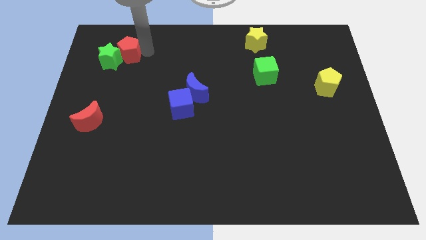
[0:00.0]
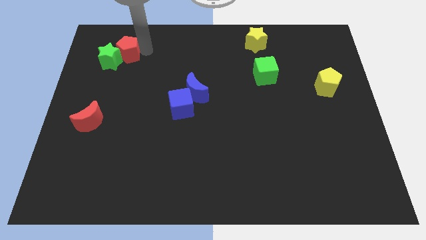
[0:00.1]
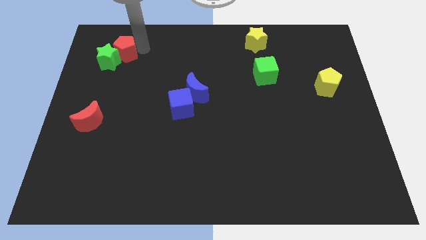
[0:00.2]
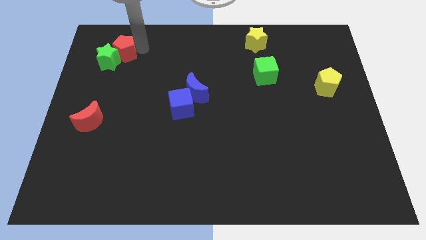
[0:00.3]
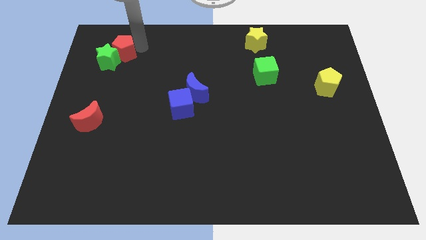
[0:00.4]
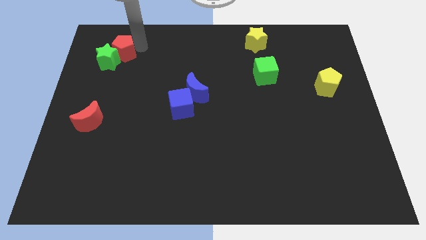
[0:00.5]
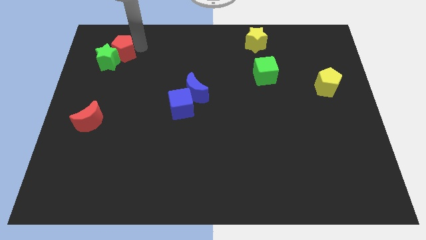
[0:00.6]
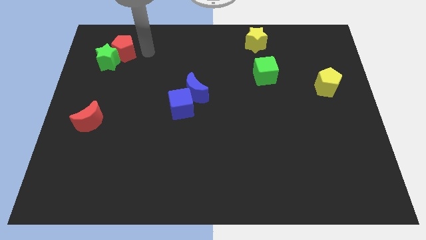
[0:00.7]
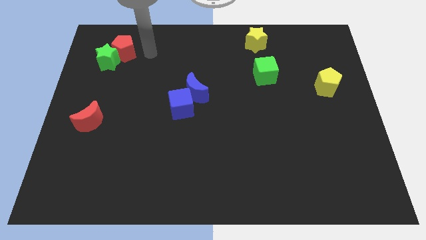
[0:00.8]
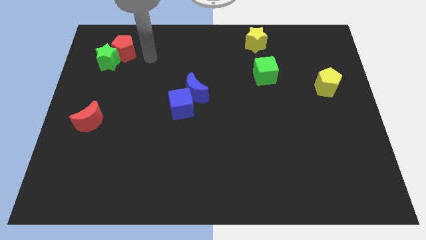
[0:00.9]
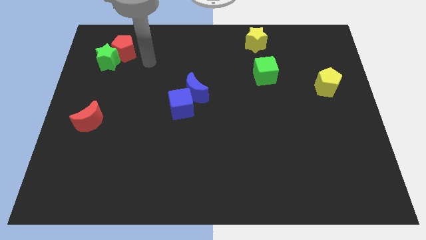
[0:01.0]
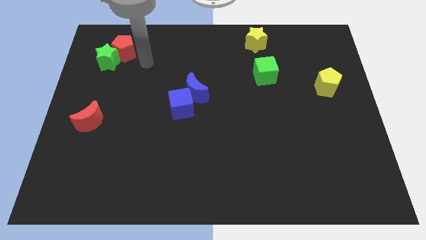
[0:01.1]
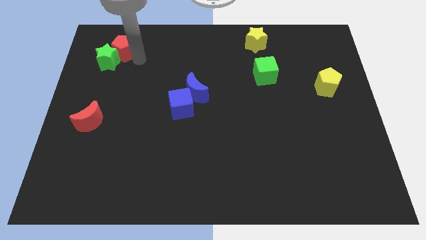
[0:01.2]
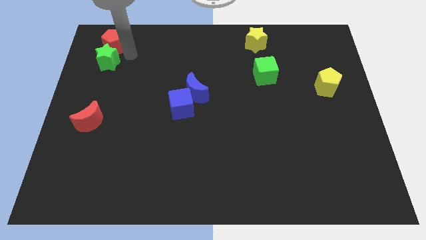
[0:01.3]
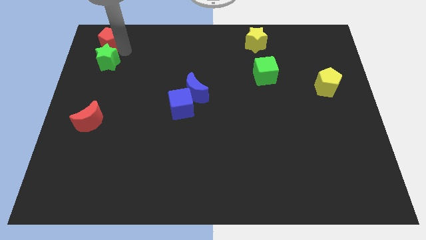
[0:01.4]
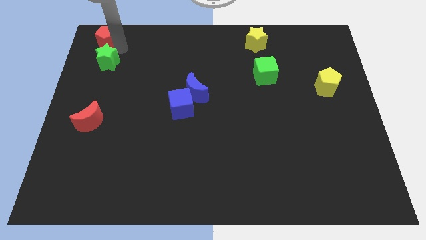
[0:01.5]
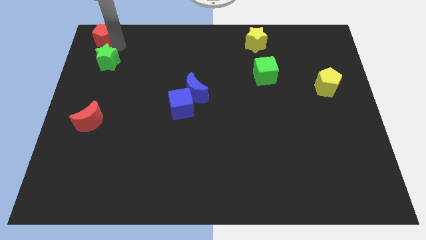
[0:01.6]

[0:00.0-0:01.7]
move red pentagon above the green star

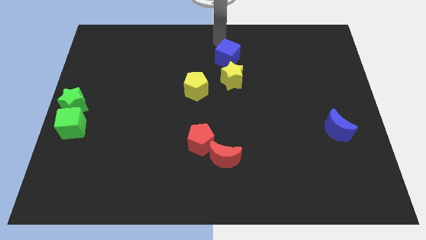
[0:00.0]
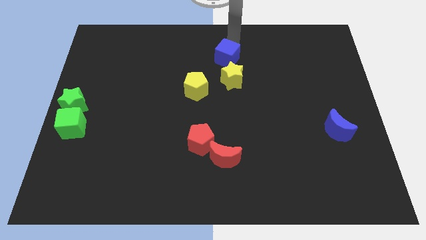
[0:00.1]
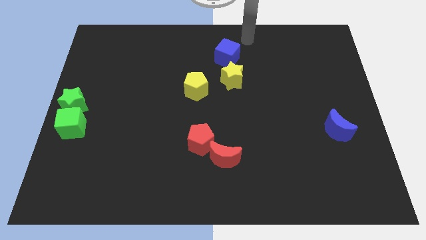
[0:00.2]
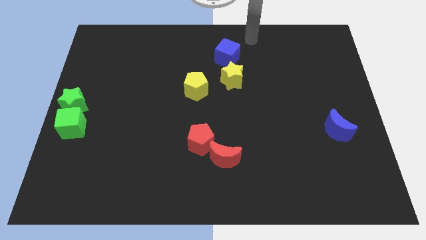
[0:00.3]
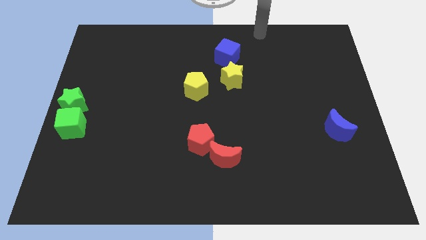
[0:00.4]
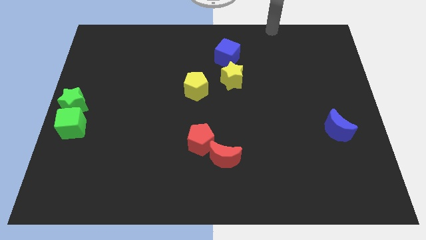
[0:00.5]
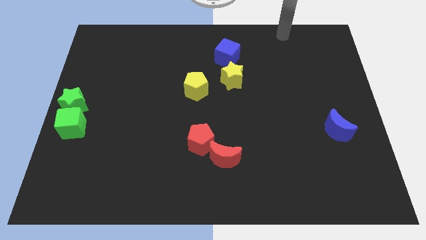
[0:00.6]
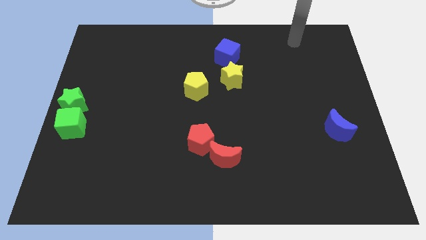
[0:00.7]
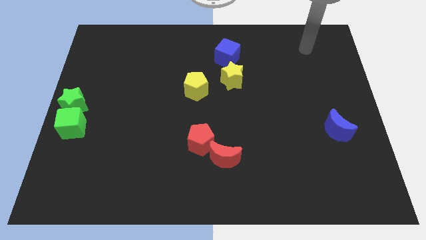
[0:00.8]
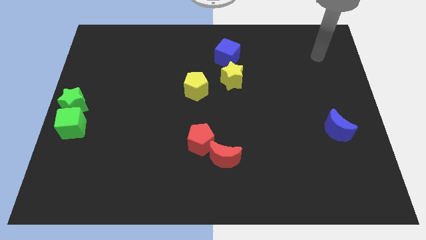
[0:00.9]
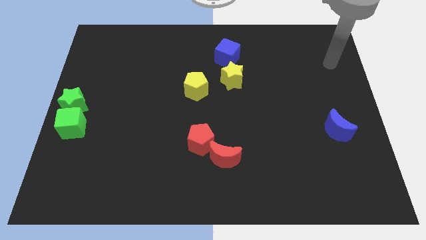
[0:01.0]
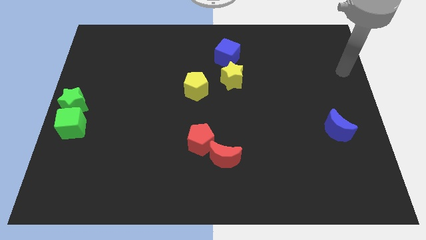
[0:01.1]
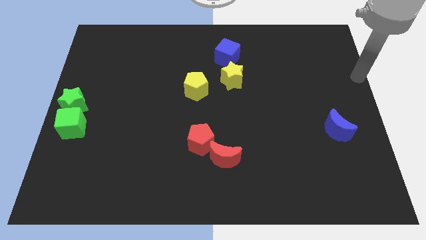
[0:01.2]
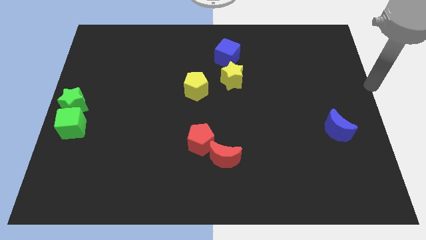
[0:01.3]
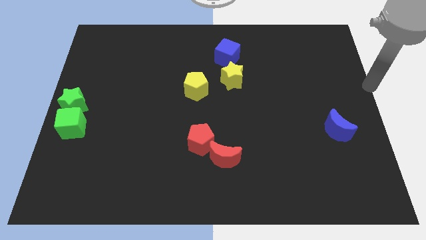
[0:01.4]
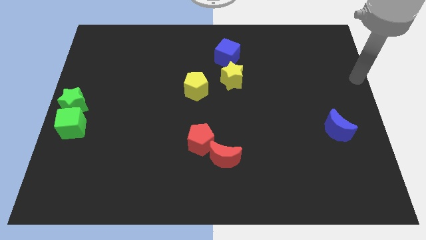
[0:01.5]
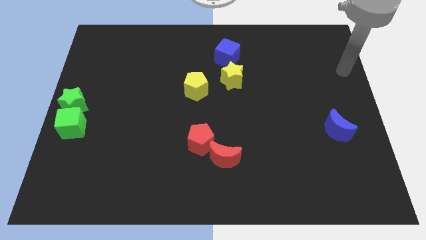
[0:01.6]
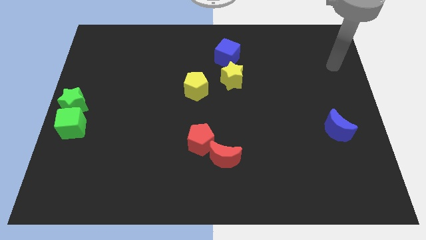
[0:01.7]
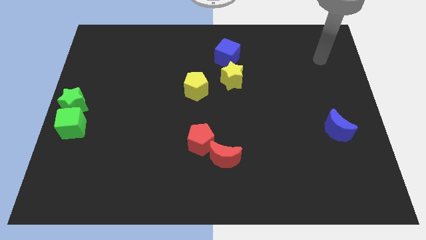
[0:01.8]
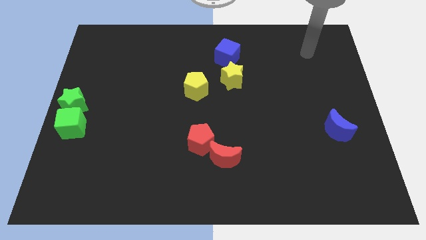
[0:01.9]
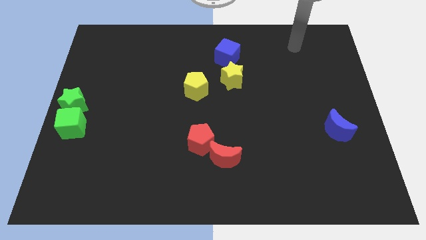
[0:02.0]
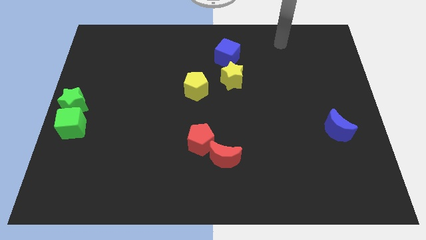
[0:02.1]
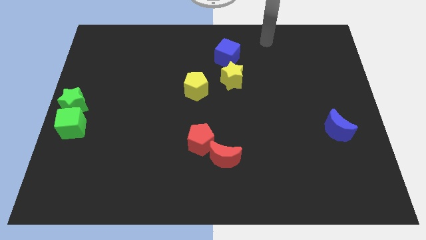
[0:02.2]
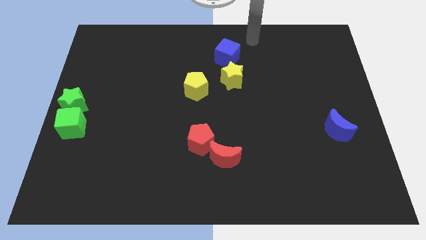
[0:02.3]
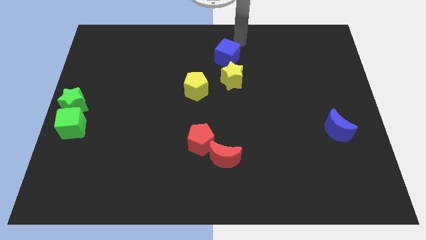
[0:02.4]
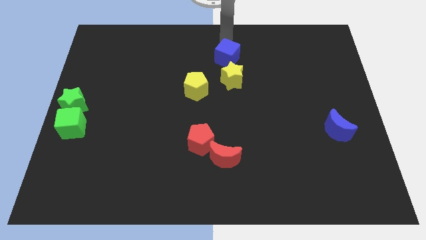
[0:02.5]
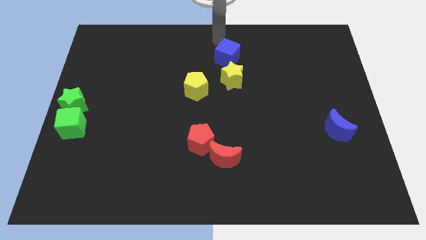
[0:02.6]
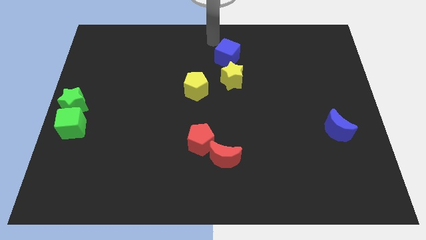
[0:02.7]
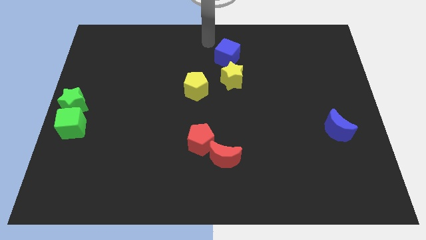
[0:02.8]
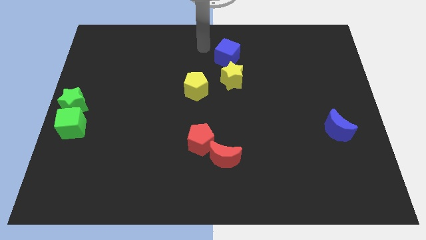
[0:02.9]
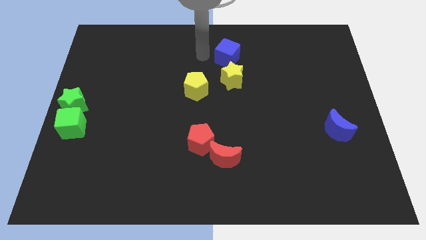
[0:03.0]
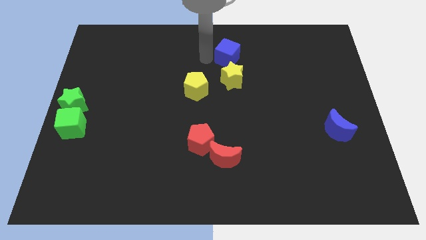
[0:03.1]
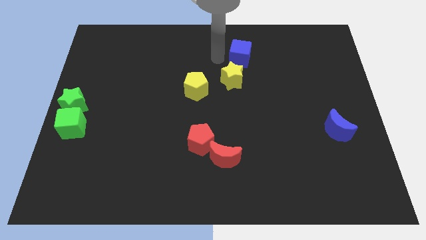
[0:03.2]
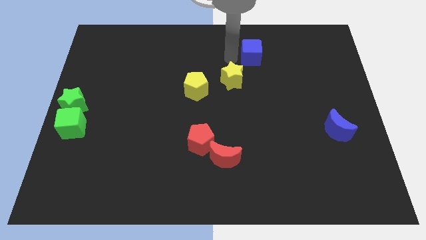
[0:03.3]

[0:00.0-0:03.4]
push the blue cube to the top right of the yellow star

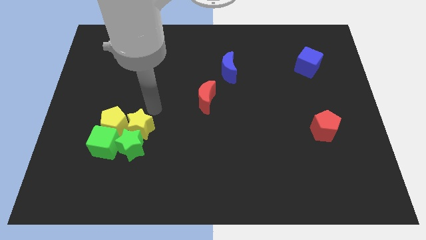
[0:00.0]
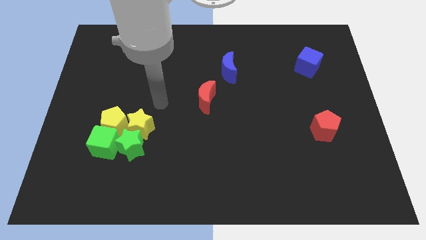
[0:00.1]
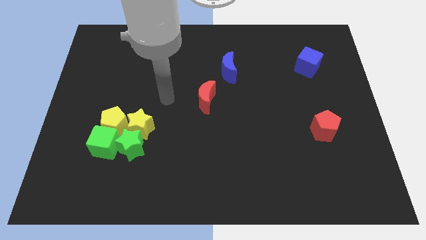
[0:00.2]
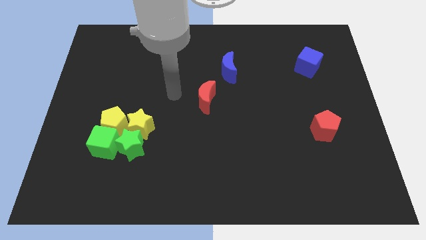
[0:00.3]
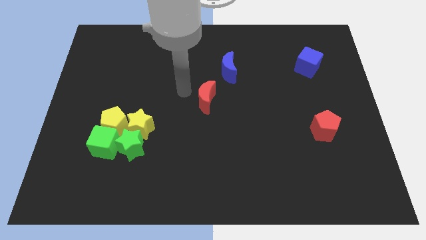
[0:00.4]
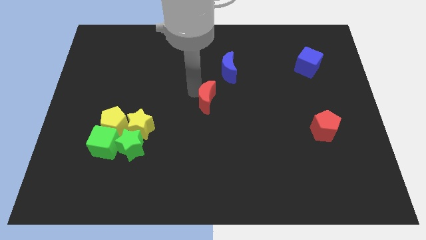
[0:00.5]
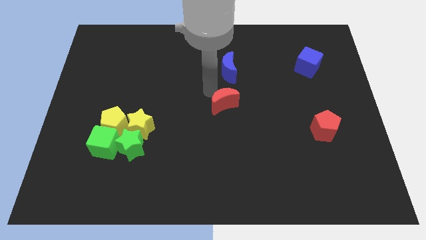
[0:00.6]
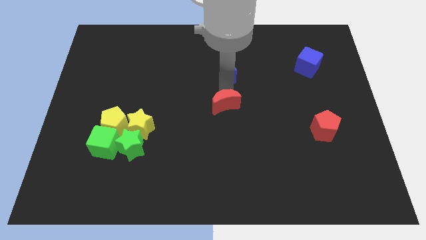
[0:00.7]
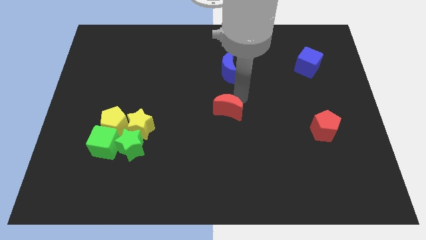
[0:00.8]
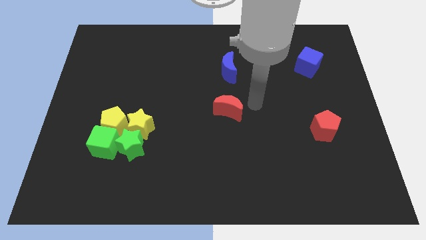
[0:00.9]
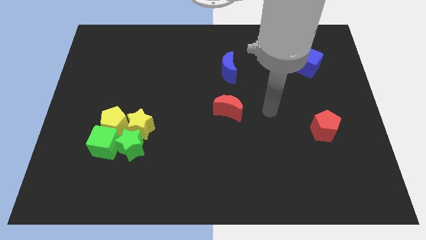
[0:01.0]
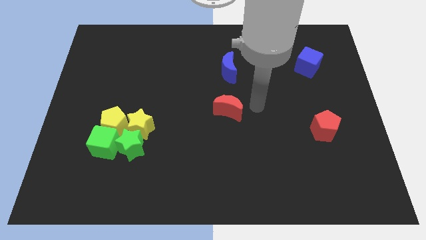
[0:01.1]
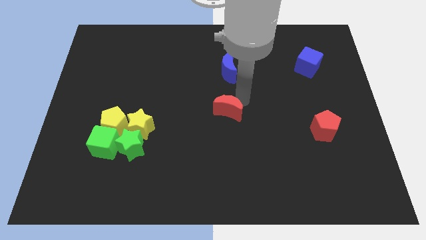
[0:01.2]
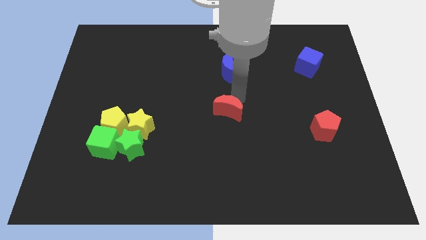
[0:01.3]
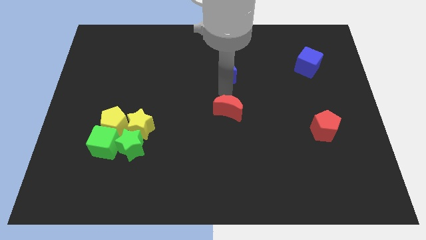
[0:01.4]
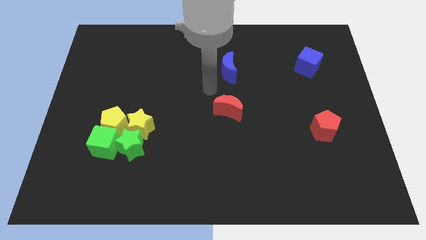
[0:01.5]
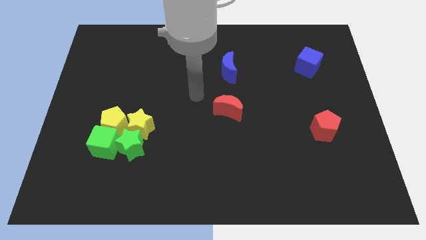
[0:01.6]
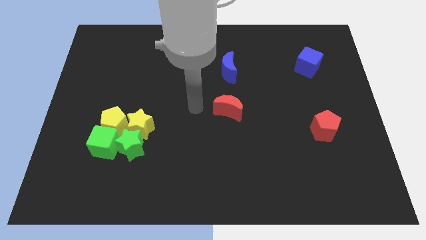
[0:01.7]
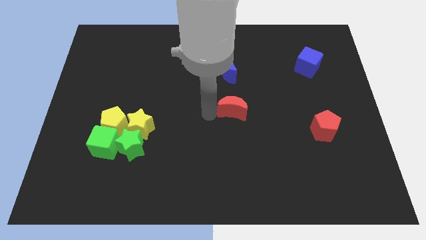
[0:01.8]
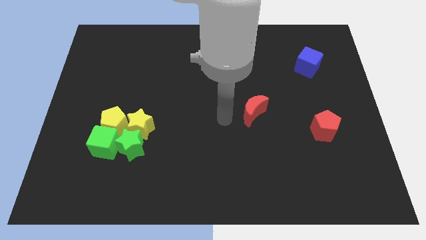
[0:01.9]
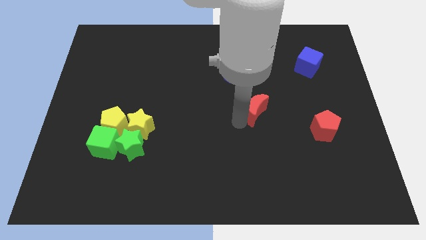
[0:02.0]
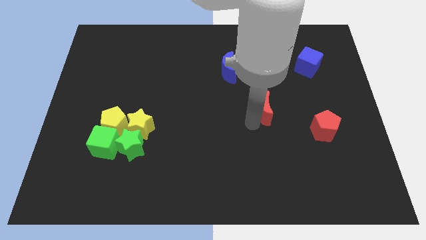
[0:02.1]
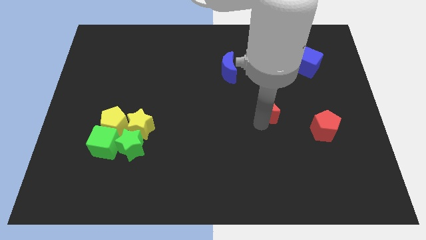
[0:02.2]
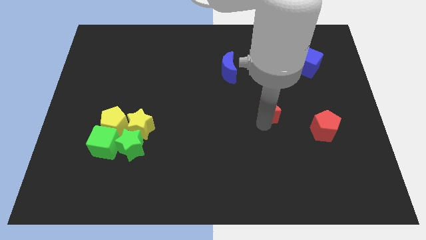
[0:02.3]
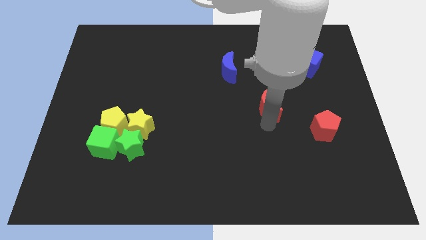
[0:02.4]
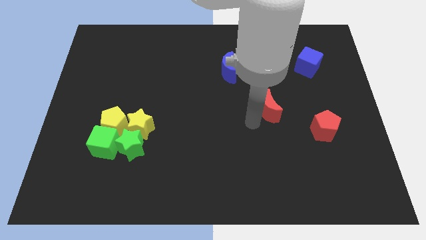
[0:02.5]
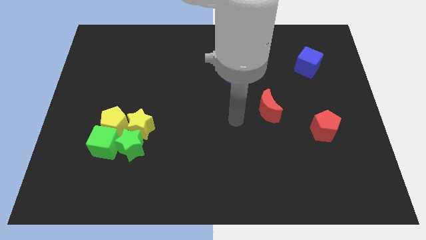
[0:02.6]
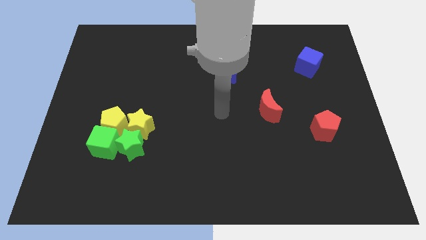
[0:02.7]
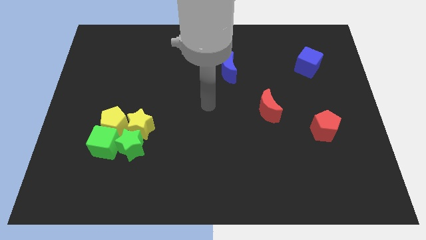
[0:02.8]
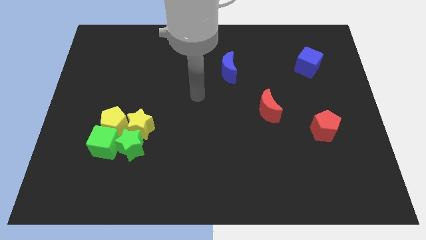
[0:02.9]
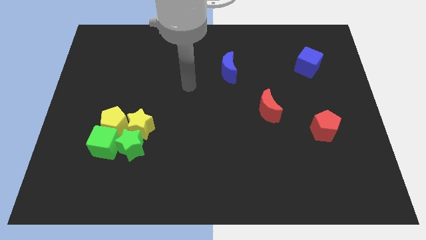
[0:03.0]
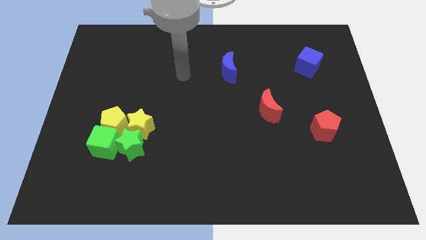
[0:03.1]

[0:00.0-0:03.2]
move the red crescent diagonally bottom left of the blue cube

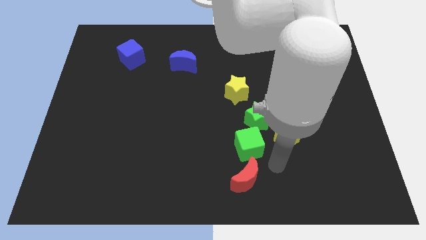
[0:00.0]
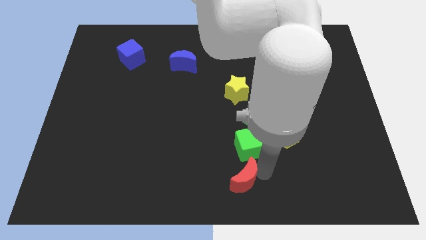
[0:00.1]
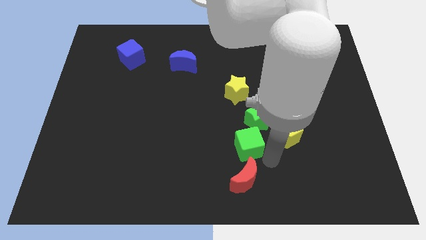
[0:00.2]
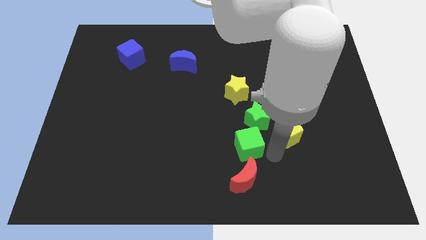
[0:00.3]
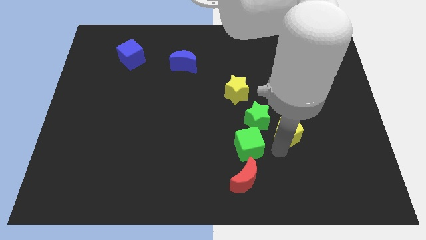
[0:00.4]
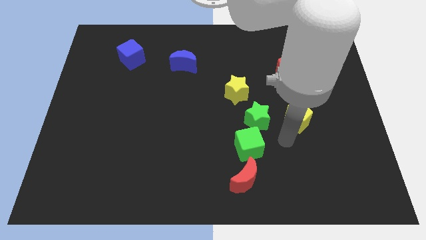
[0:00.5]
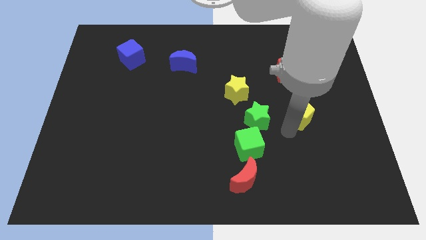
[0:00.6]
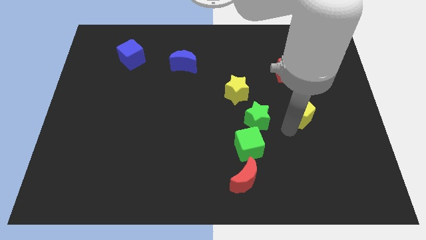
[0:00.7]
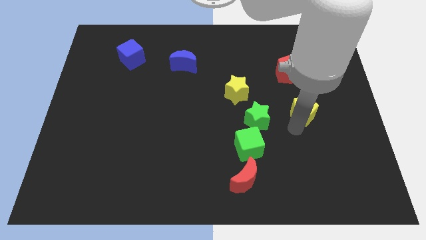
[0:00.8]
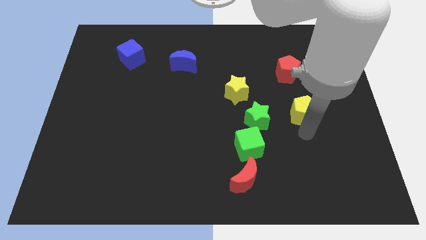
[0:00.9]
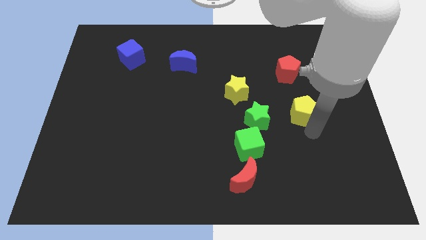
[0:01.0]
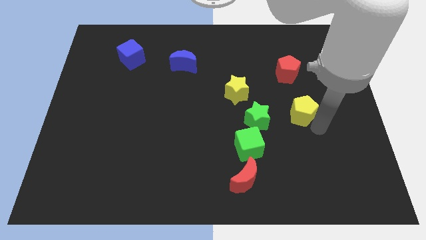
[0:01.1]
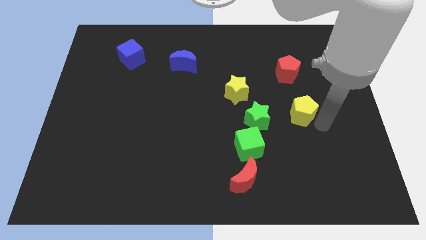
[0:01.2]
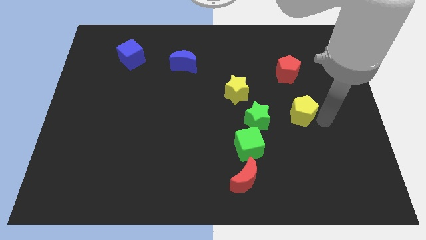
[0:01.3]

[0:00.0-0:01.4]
place the yellow pentagon right to the green star
